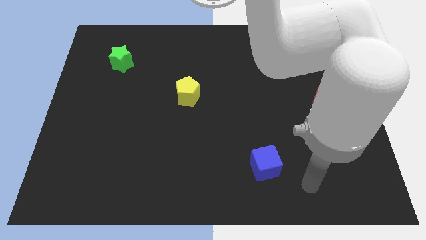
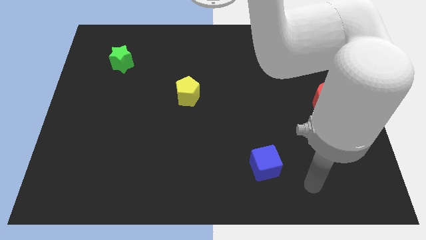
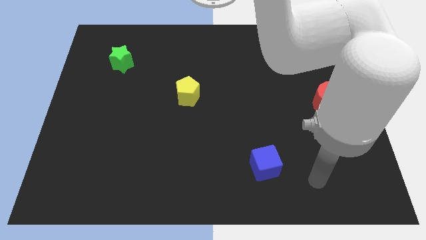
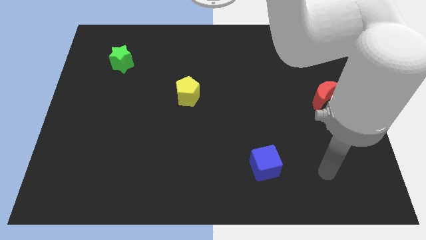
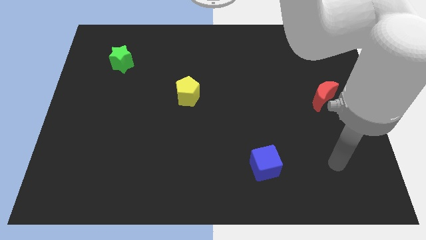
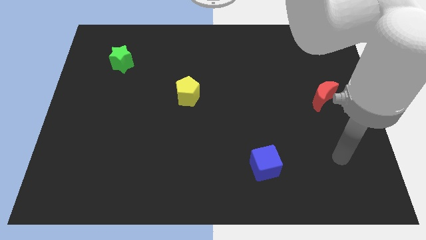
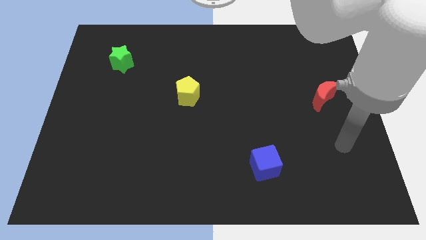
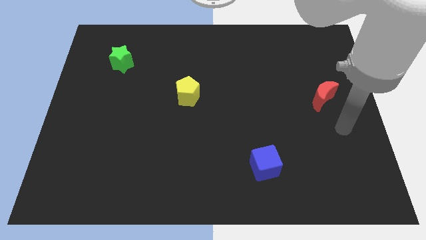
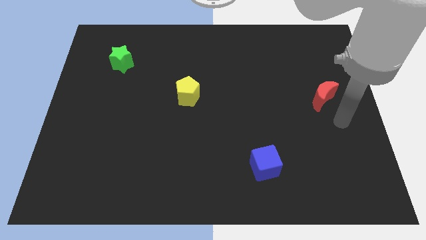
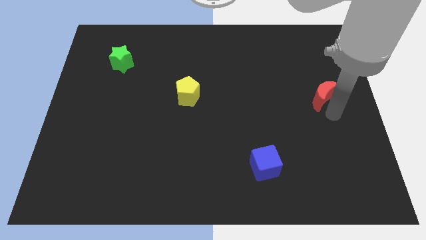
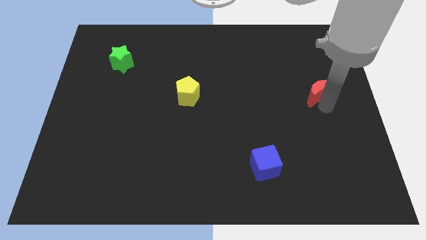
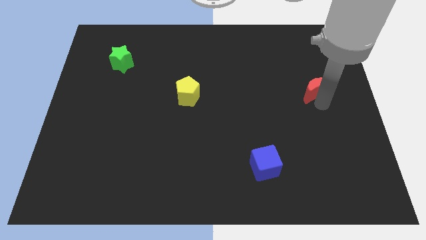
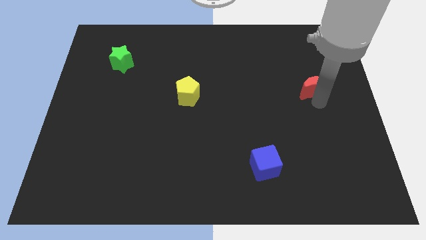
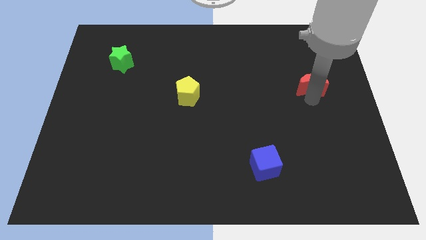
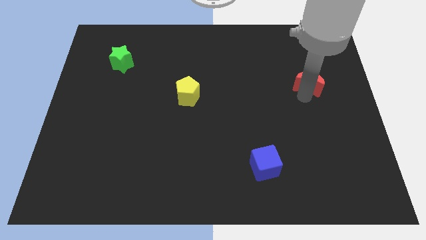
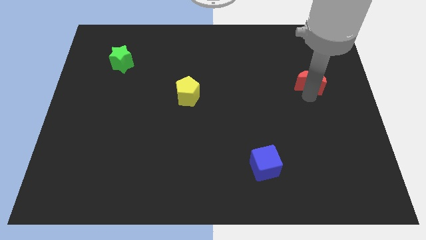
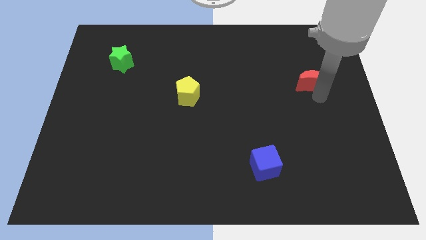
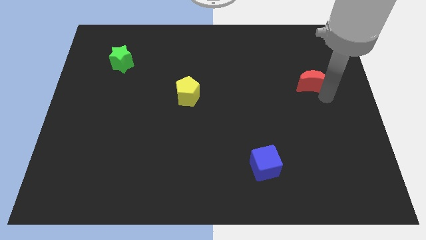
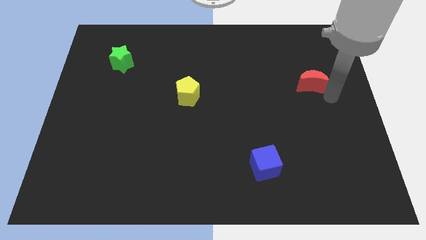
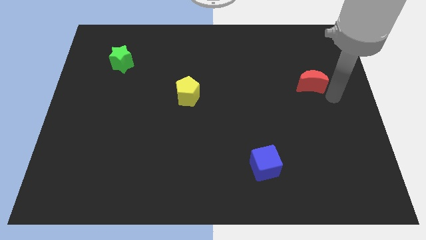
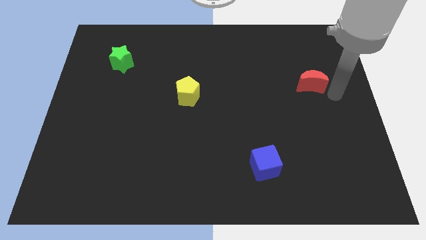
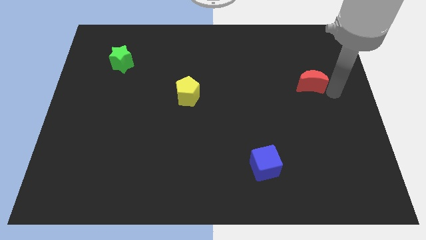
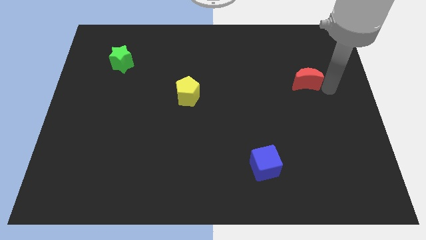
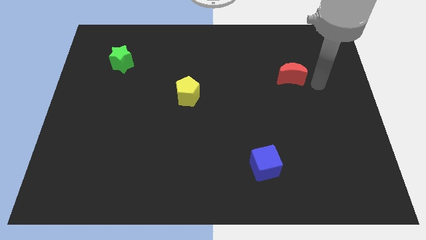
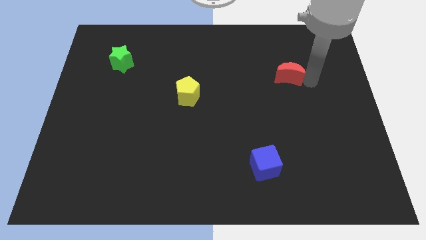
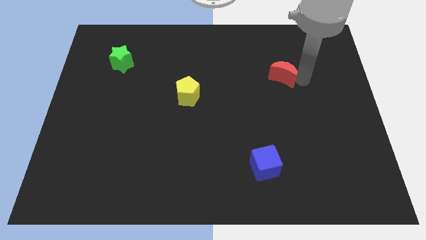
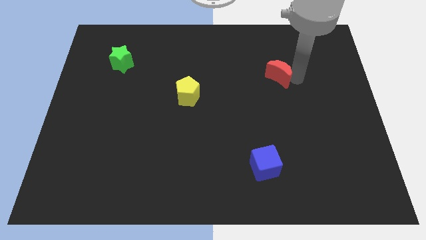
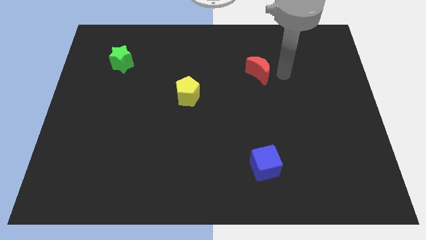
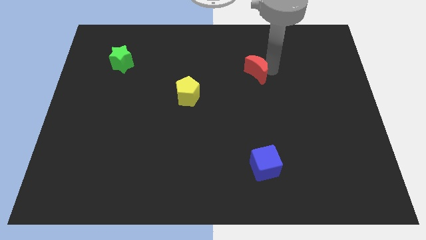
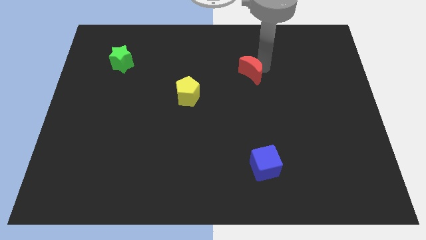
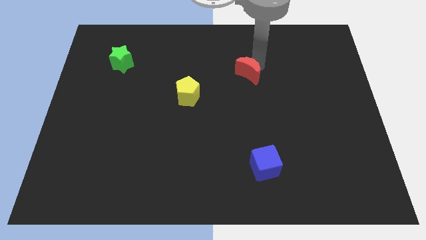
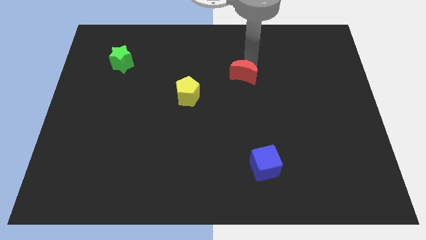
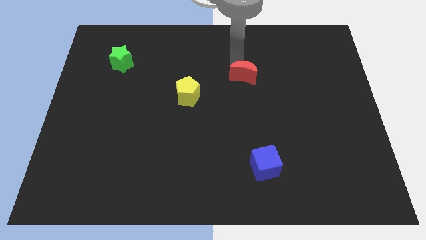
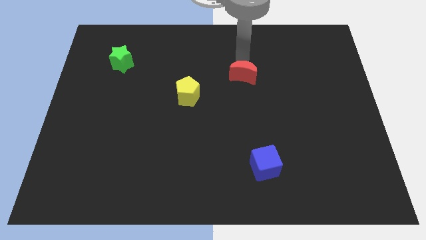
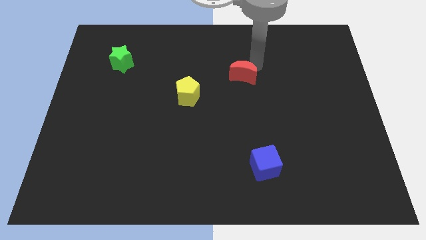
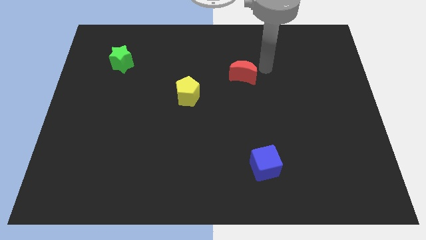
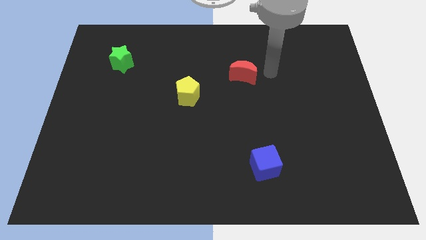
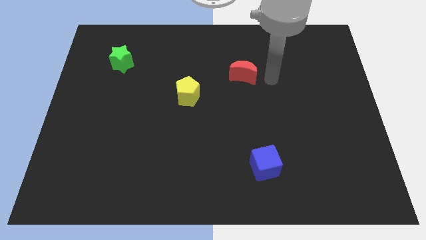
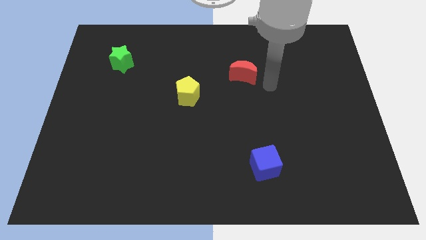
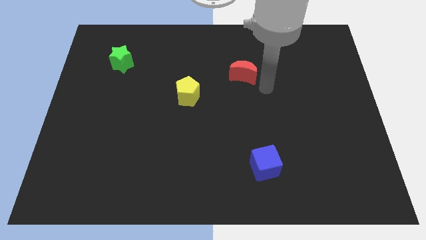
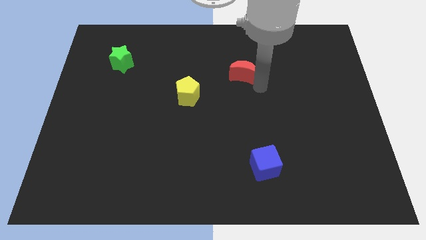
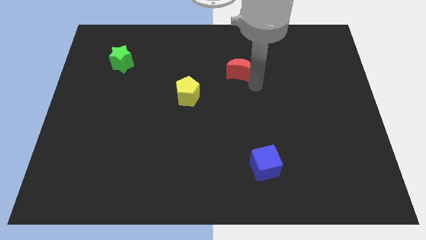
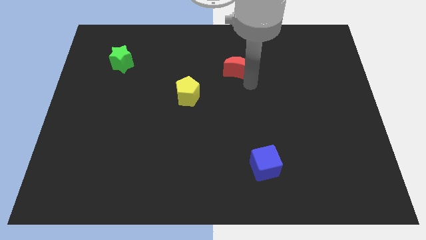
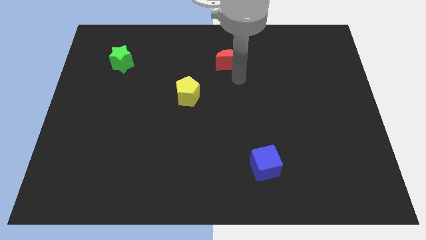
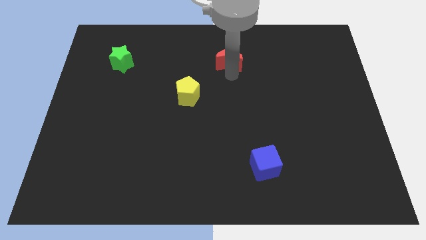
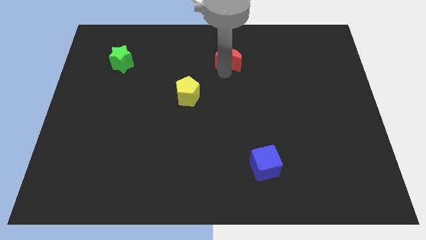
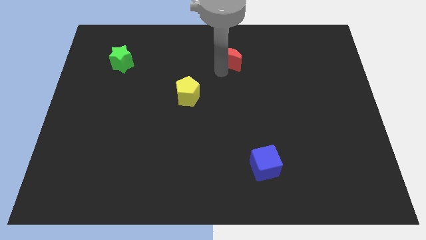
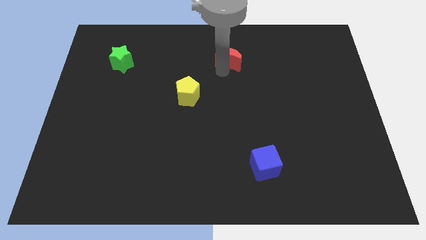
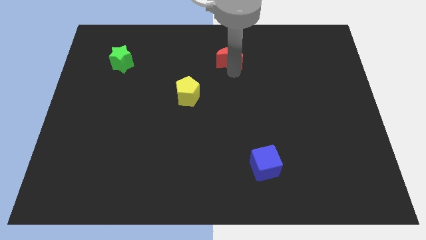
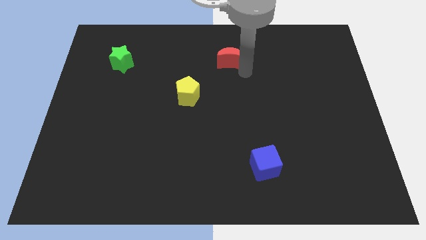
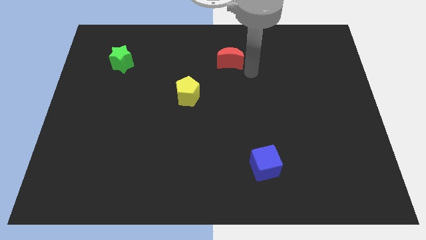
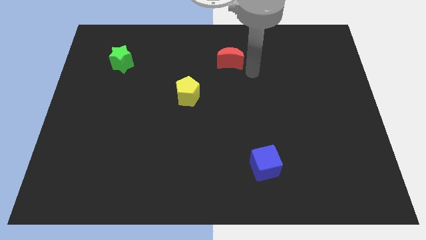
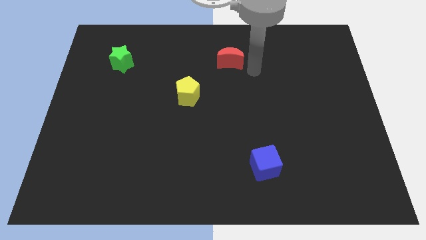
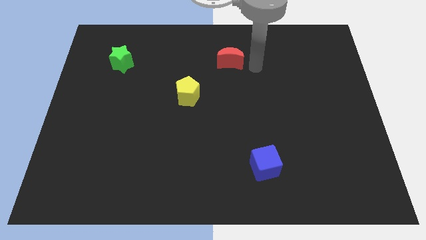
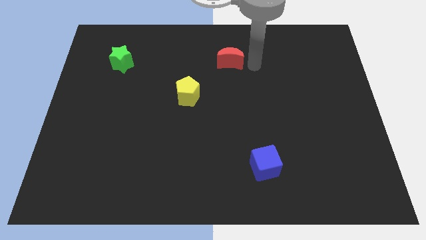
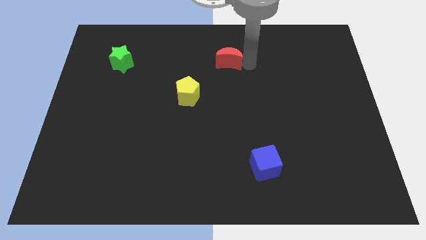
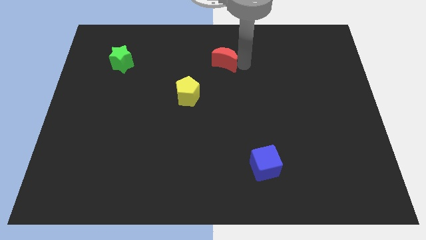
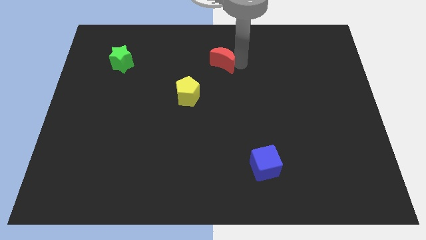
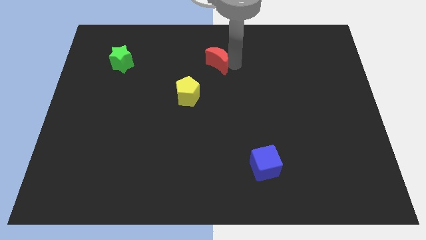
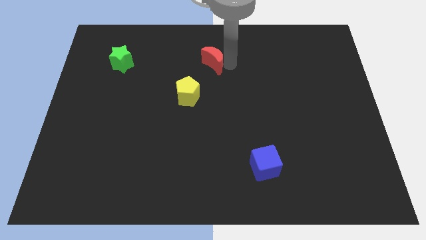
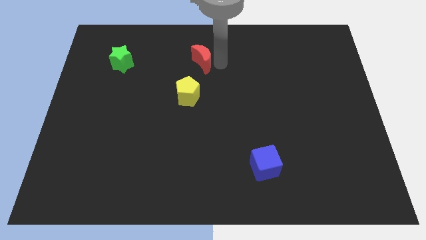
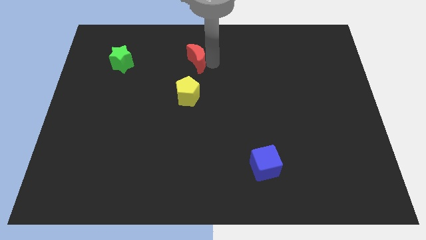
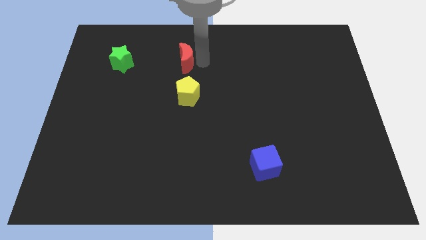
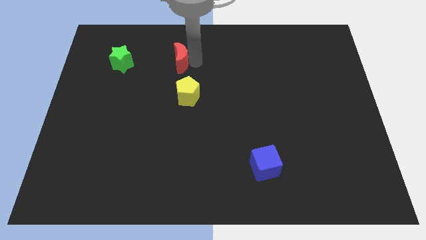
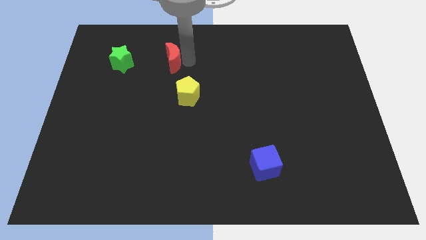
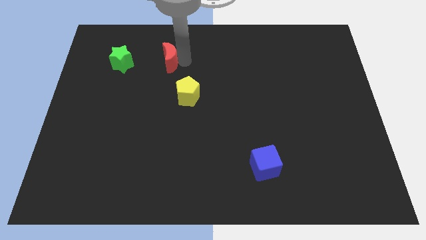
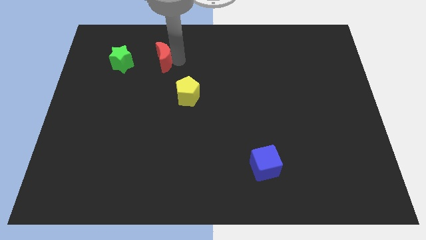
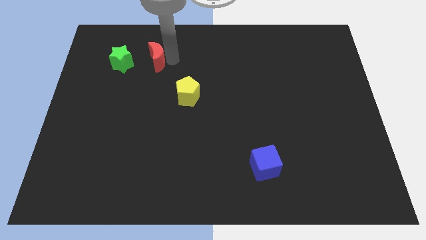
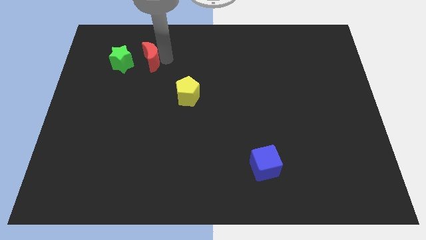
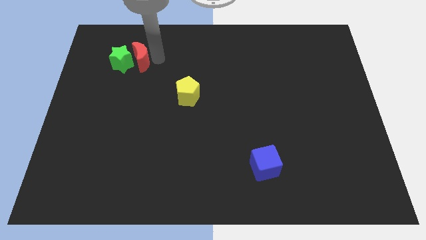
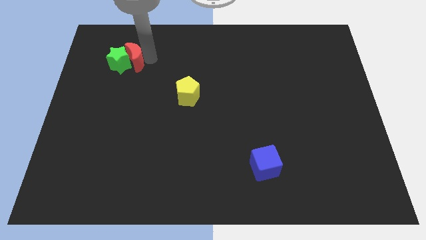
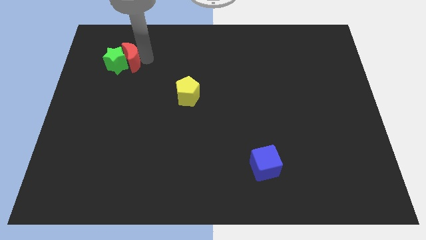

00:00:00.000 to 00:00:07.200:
put the moon close to the green block

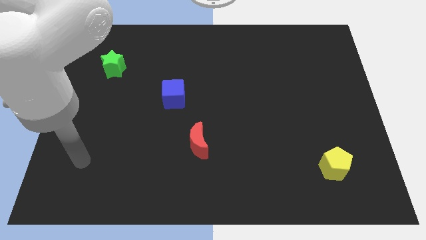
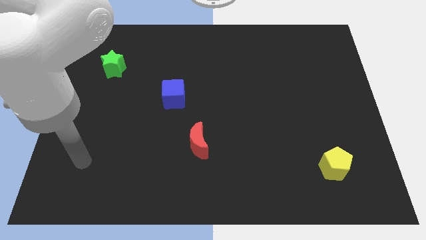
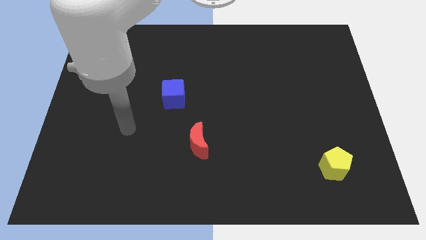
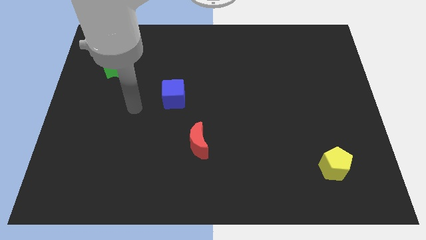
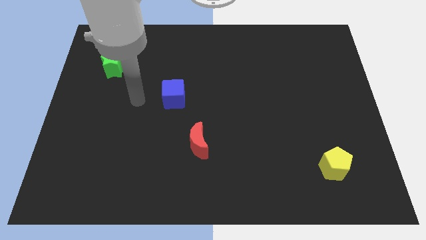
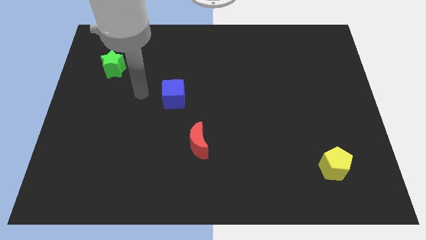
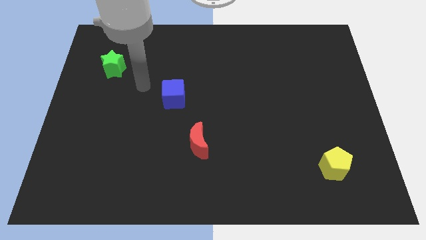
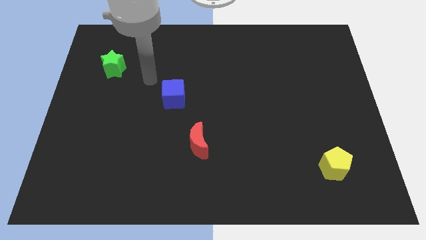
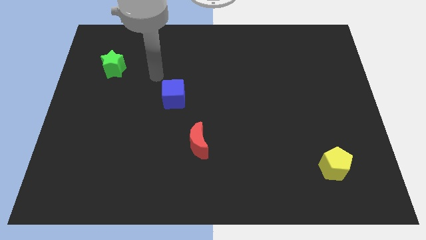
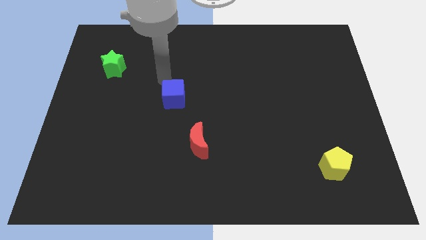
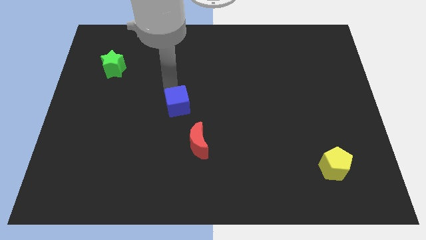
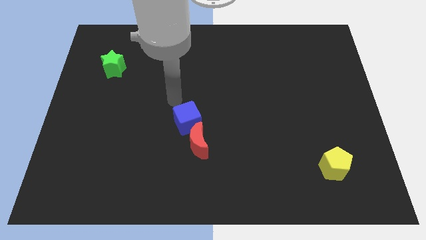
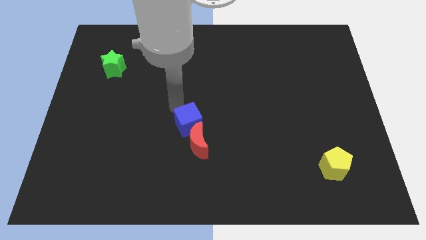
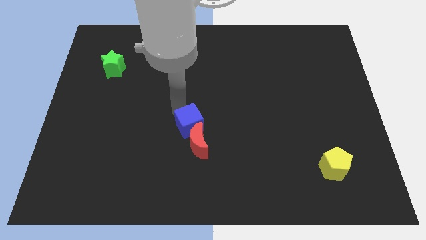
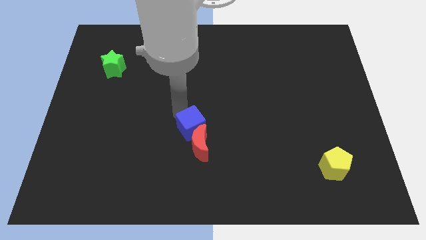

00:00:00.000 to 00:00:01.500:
push the cube to the red block

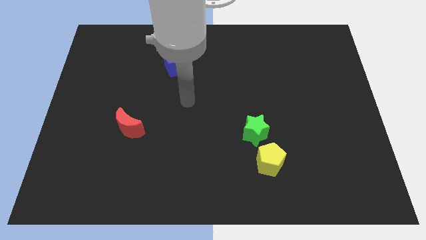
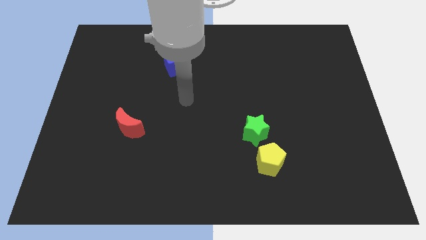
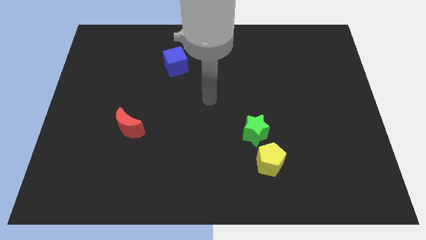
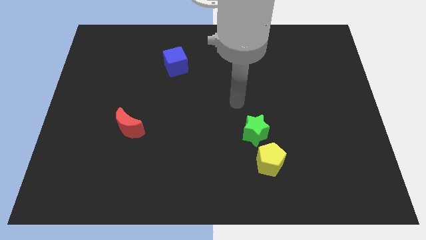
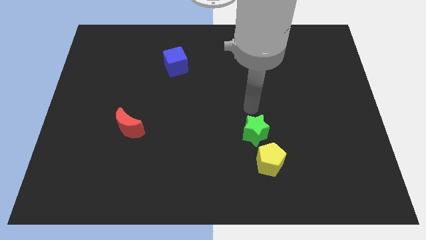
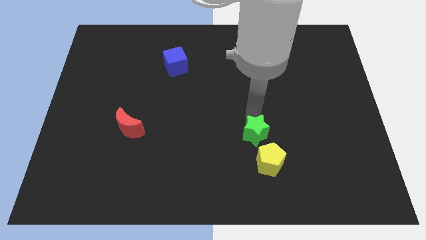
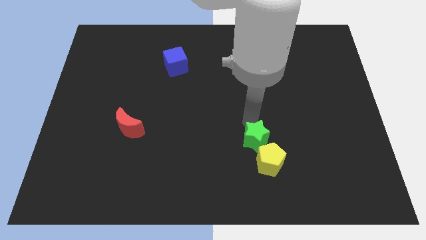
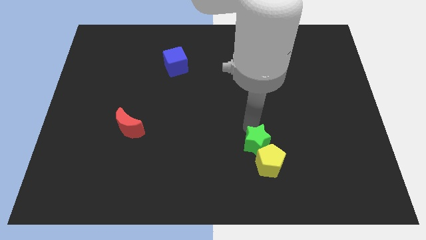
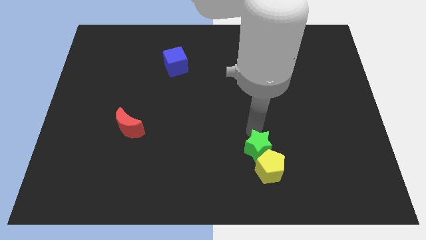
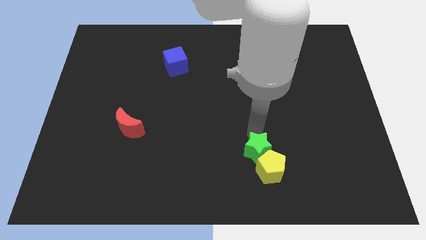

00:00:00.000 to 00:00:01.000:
push the green block towards the pentagon
